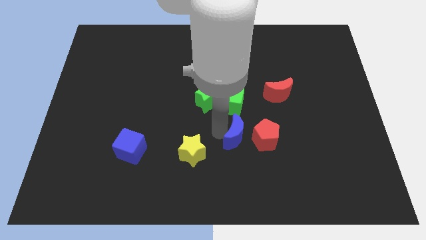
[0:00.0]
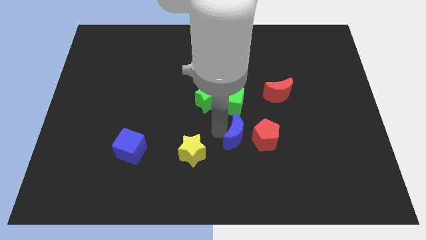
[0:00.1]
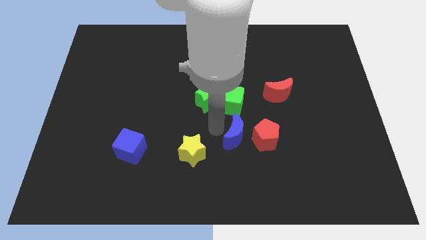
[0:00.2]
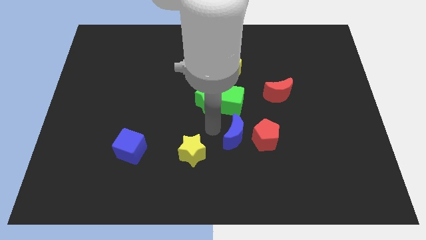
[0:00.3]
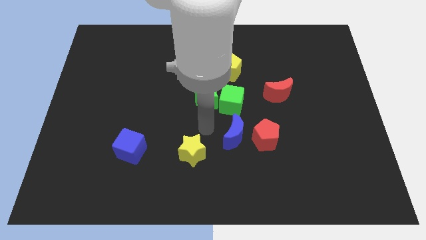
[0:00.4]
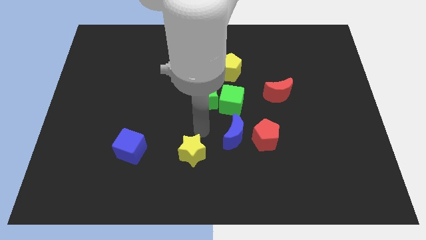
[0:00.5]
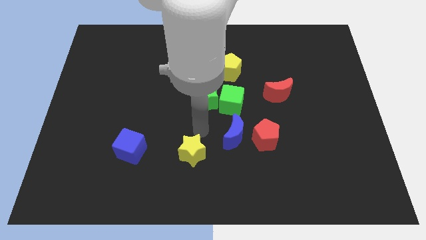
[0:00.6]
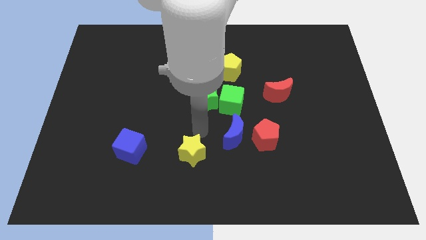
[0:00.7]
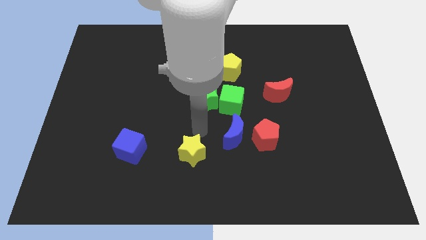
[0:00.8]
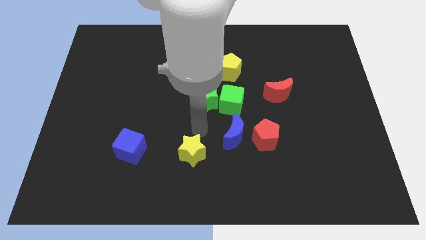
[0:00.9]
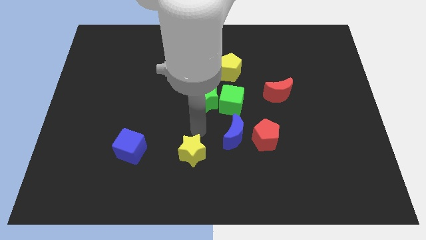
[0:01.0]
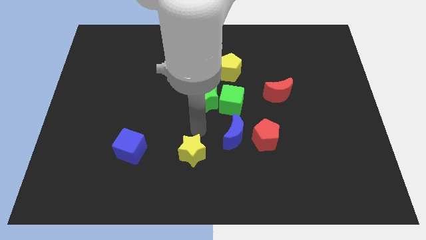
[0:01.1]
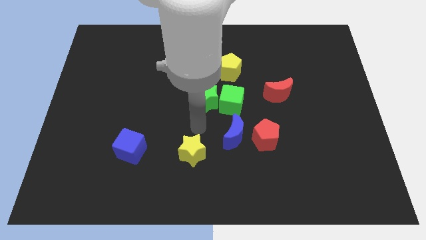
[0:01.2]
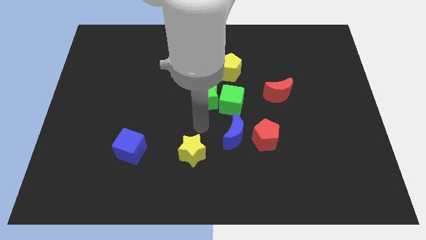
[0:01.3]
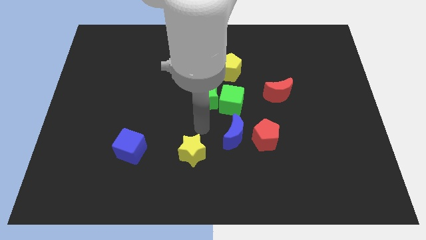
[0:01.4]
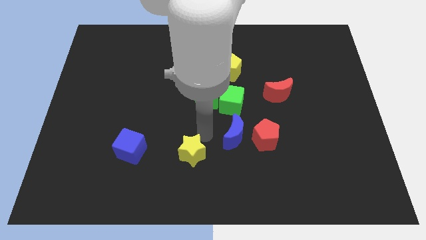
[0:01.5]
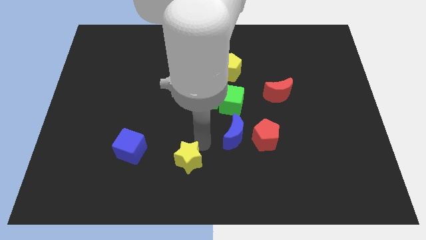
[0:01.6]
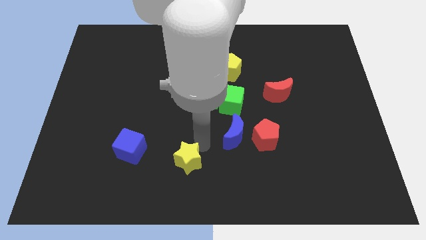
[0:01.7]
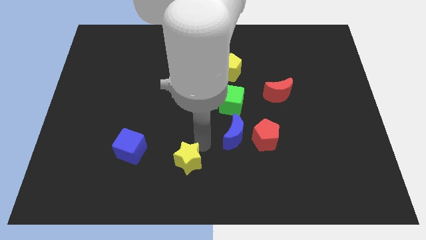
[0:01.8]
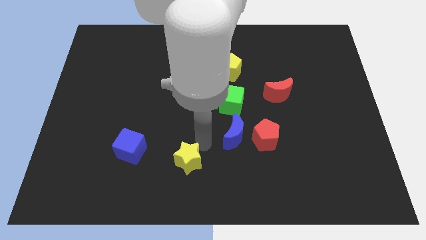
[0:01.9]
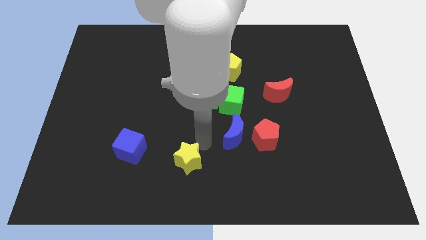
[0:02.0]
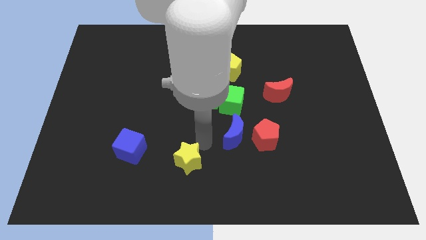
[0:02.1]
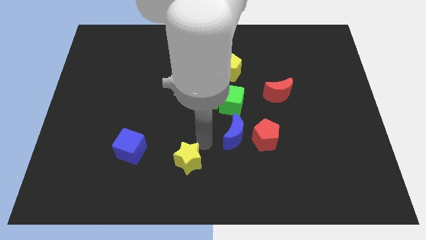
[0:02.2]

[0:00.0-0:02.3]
slightly push the yellow star towards the bottom of the board

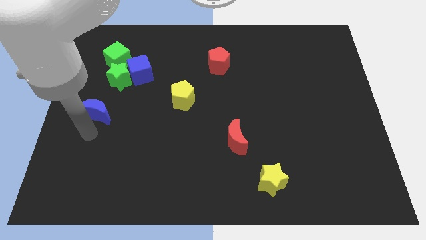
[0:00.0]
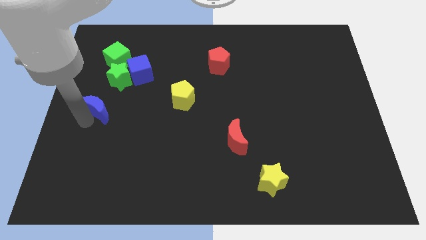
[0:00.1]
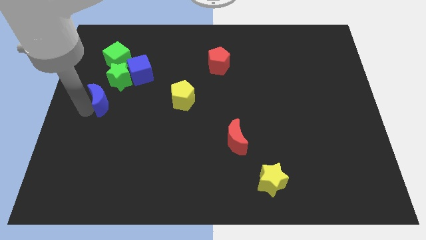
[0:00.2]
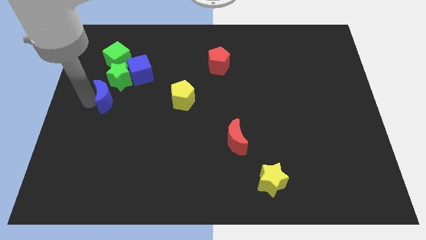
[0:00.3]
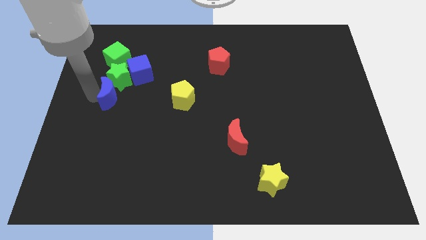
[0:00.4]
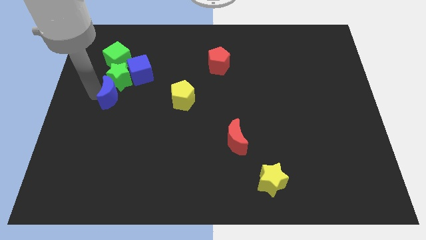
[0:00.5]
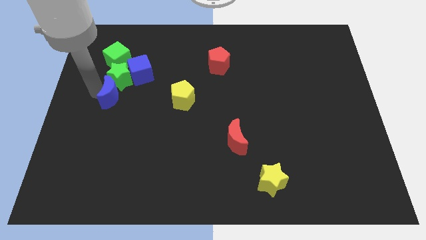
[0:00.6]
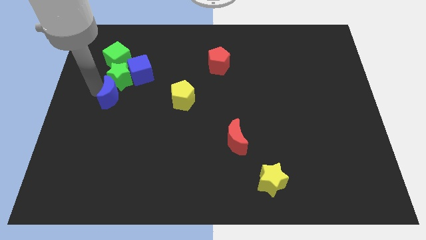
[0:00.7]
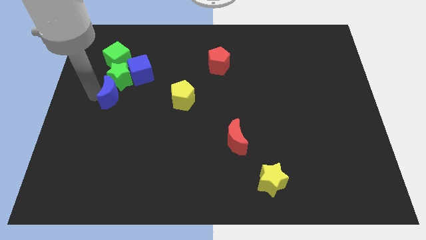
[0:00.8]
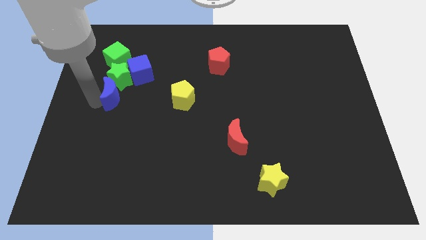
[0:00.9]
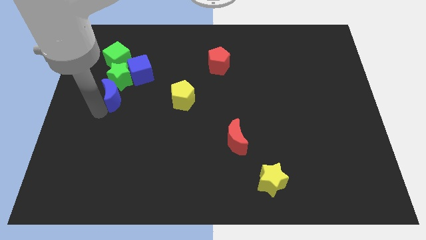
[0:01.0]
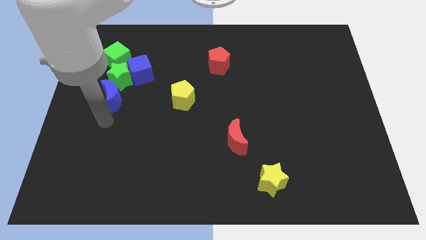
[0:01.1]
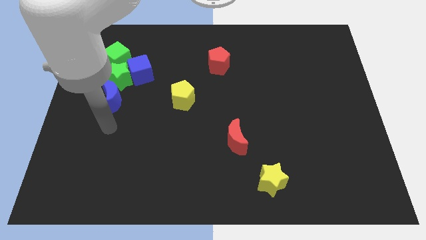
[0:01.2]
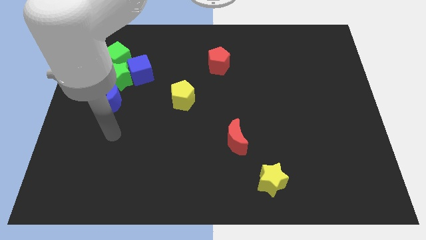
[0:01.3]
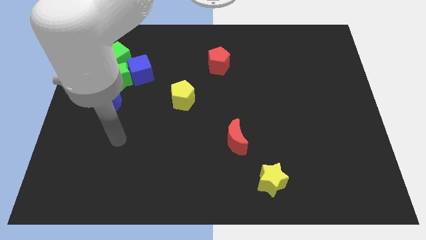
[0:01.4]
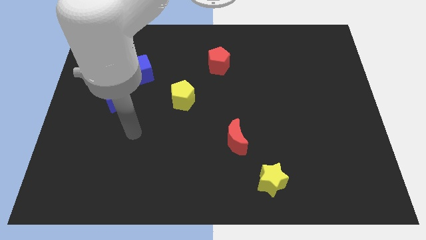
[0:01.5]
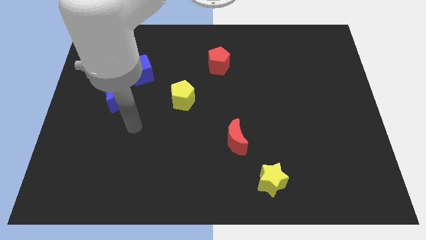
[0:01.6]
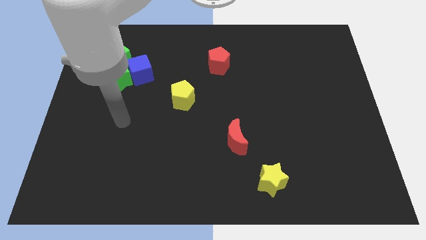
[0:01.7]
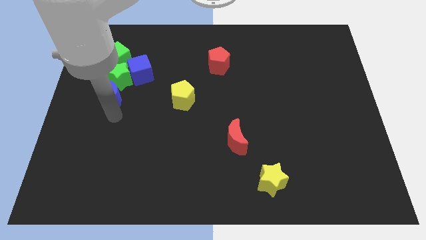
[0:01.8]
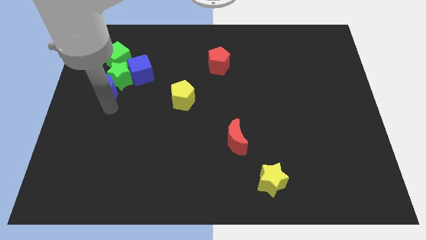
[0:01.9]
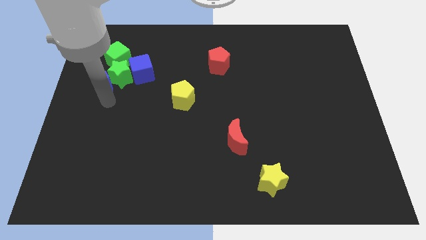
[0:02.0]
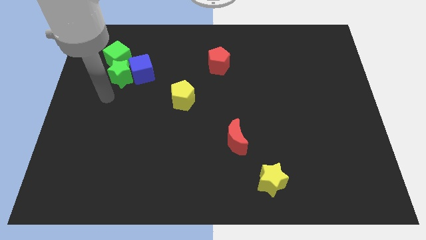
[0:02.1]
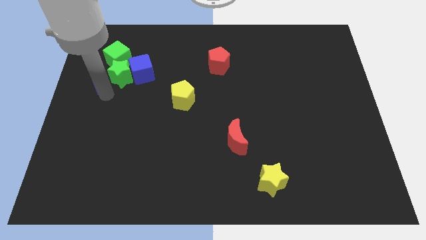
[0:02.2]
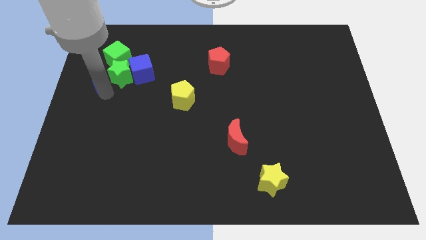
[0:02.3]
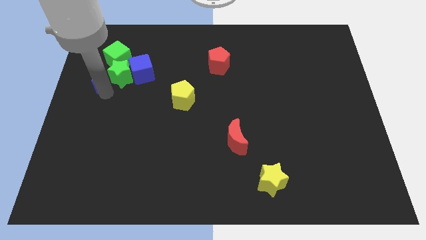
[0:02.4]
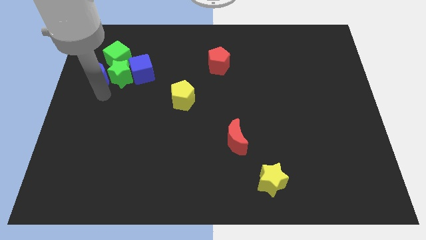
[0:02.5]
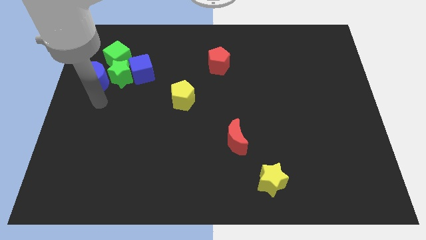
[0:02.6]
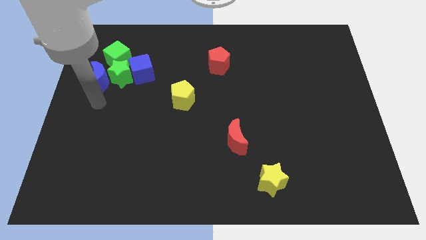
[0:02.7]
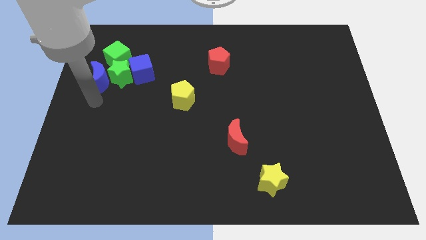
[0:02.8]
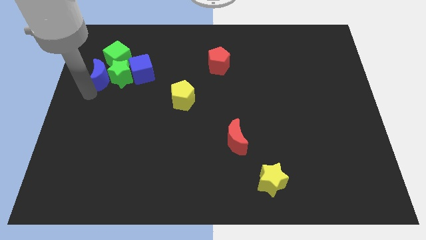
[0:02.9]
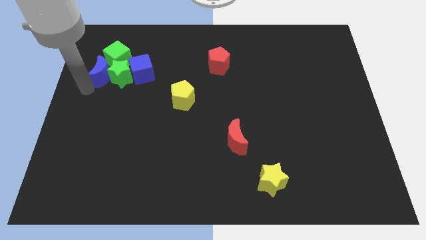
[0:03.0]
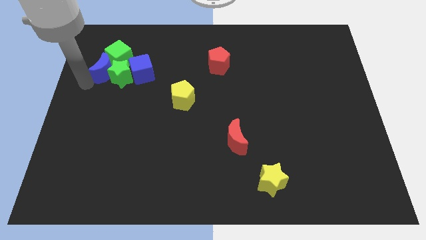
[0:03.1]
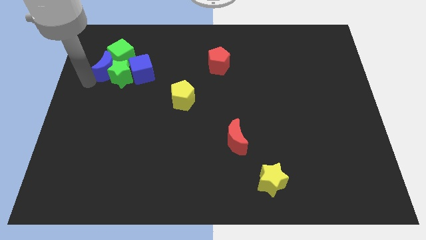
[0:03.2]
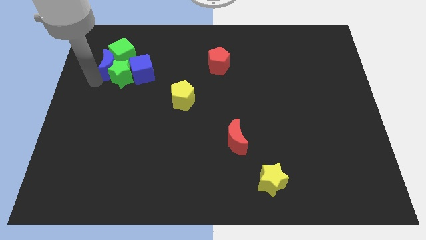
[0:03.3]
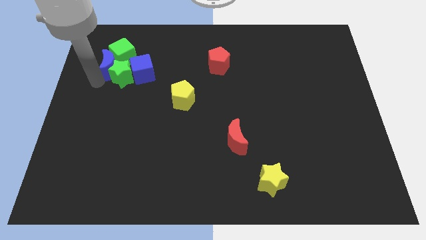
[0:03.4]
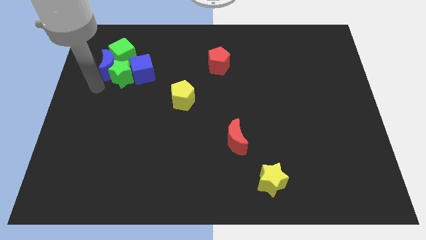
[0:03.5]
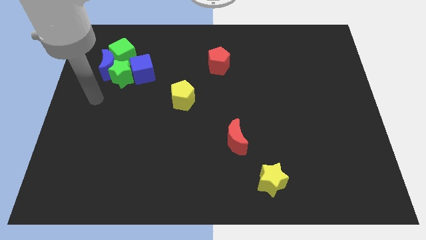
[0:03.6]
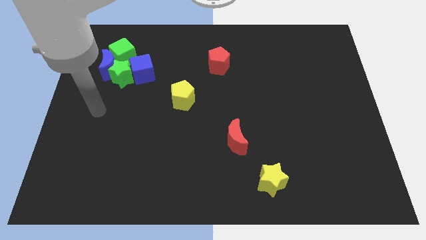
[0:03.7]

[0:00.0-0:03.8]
push the blue moon into green cube

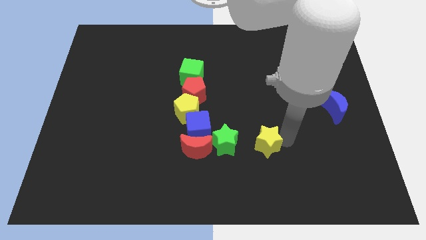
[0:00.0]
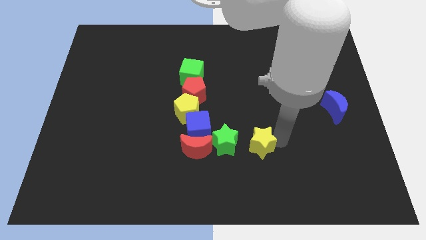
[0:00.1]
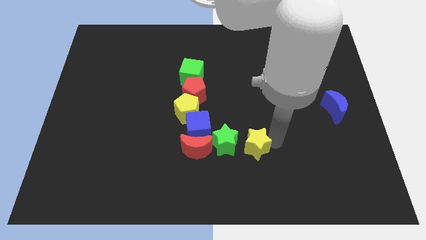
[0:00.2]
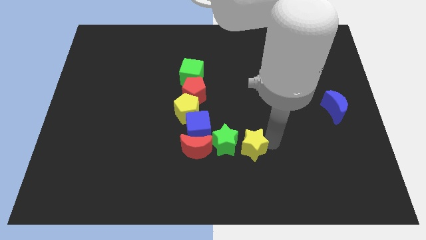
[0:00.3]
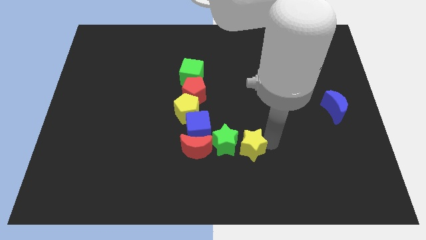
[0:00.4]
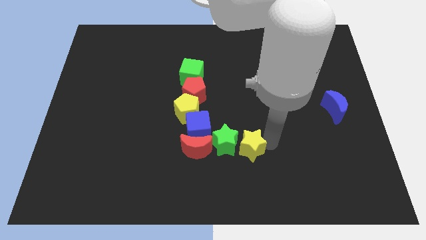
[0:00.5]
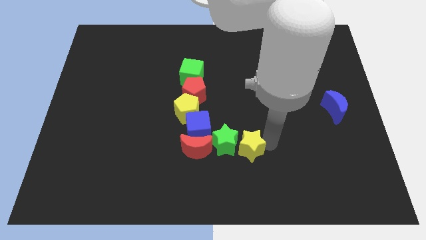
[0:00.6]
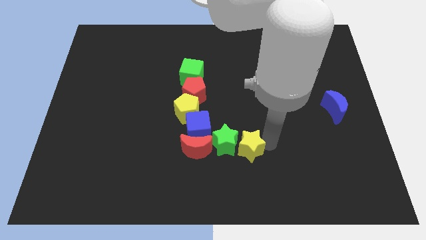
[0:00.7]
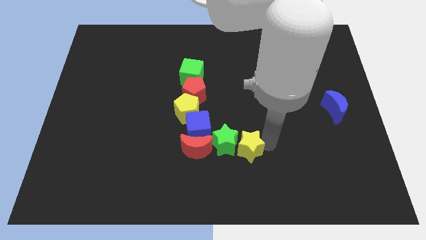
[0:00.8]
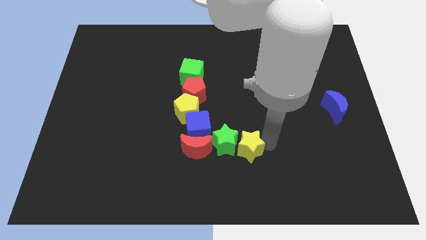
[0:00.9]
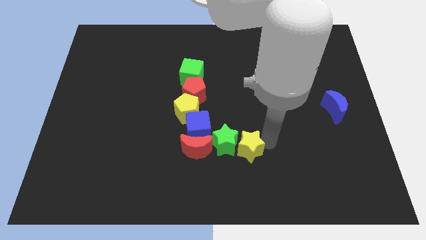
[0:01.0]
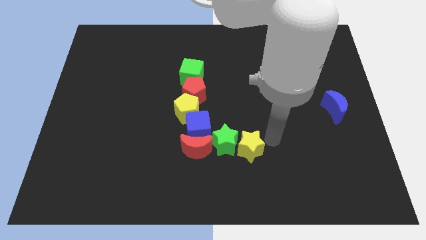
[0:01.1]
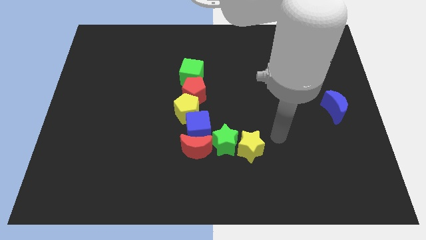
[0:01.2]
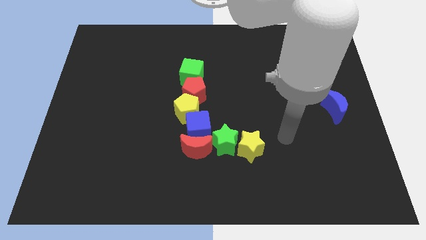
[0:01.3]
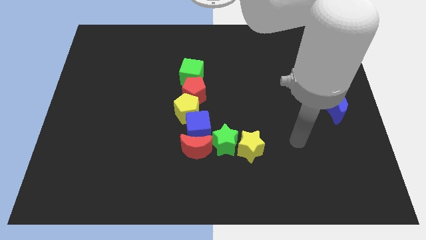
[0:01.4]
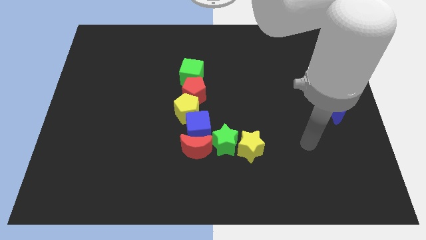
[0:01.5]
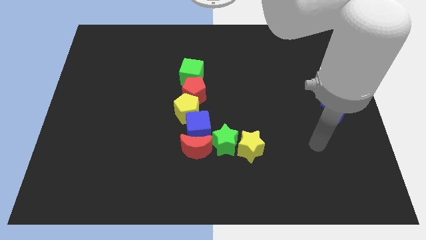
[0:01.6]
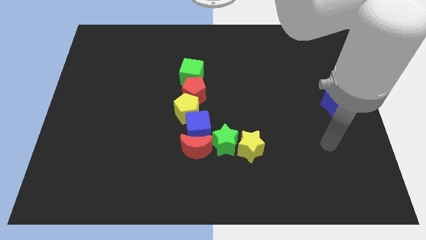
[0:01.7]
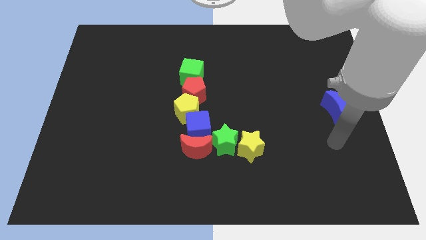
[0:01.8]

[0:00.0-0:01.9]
move the yellow star horizontally to the green star

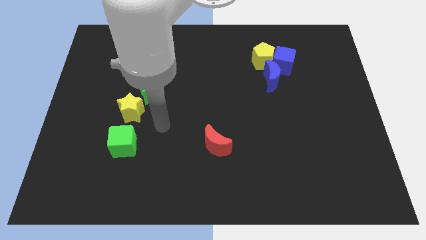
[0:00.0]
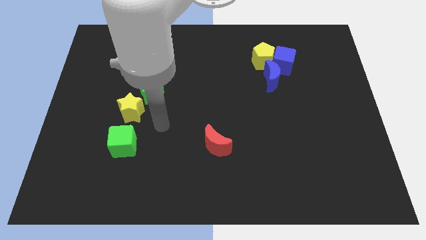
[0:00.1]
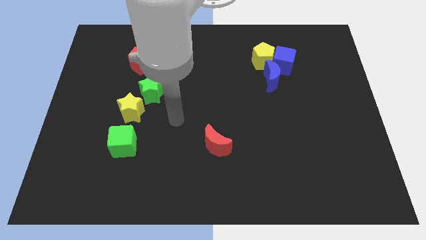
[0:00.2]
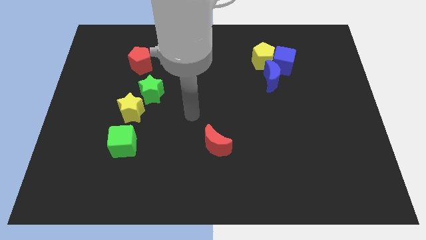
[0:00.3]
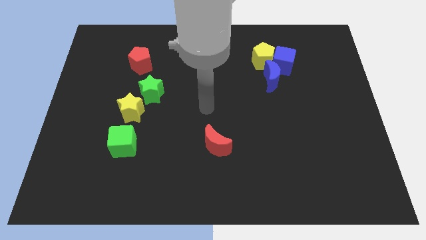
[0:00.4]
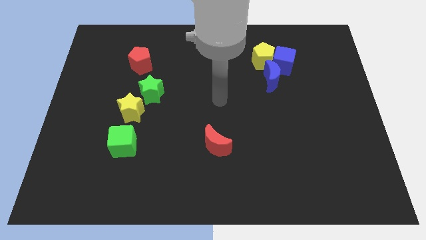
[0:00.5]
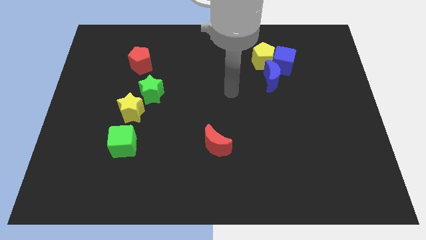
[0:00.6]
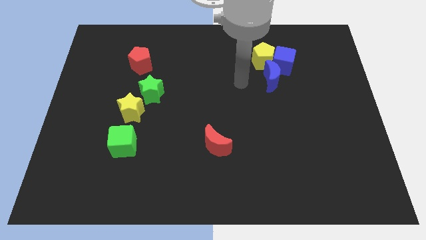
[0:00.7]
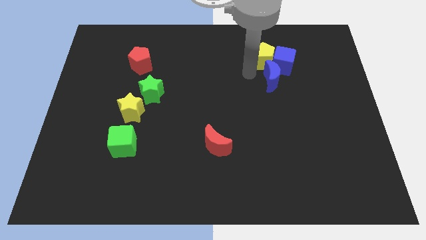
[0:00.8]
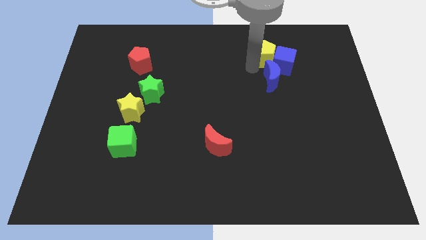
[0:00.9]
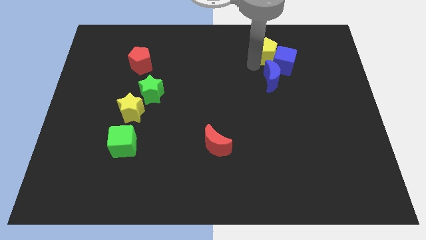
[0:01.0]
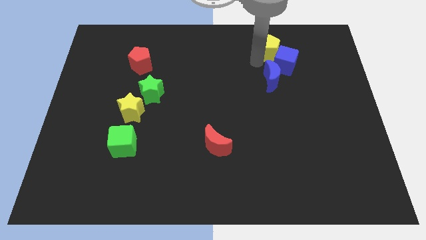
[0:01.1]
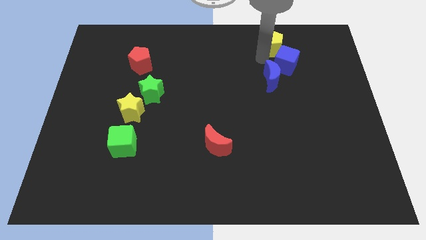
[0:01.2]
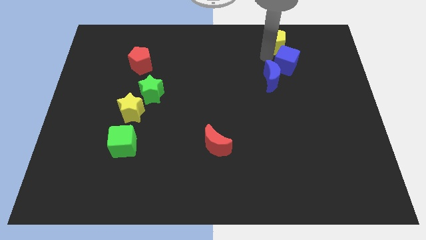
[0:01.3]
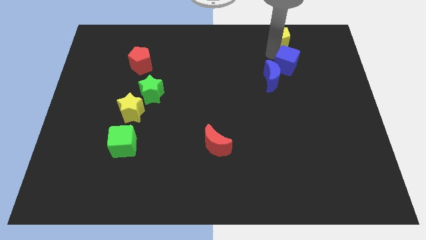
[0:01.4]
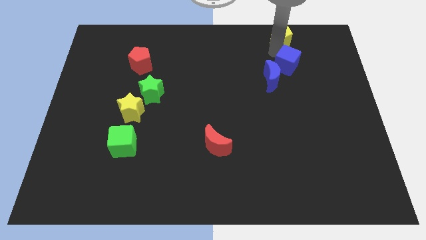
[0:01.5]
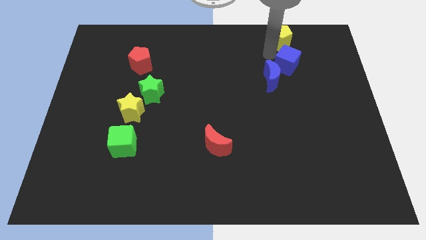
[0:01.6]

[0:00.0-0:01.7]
place the yellow pentagon above the blue cube
